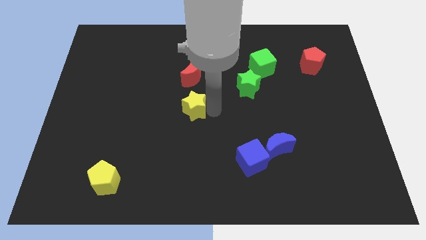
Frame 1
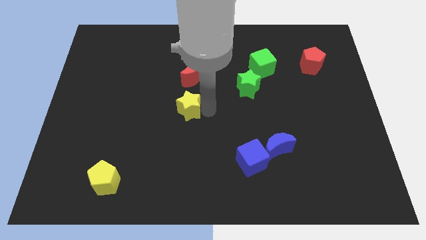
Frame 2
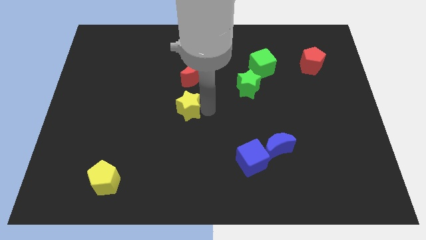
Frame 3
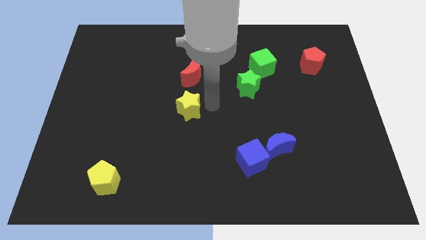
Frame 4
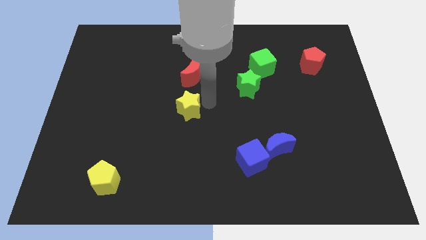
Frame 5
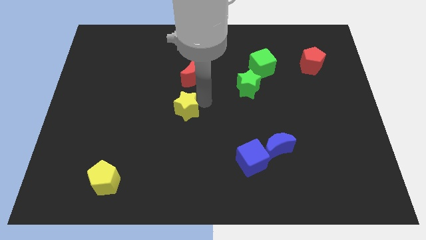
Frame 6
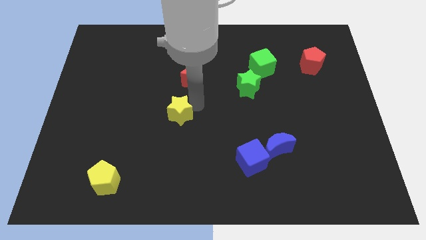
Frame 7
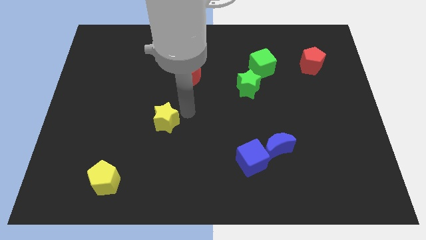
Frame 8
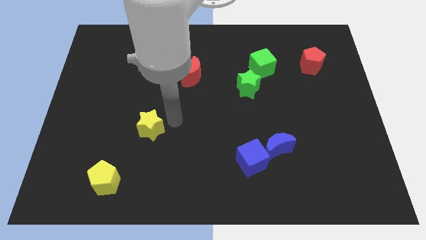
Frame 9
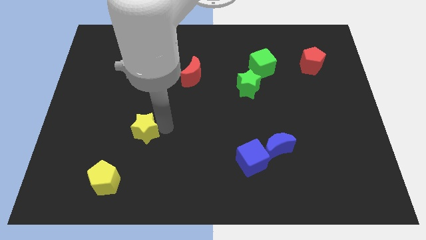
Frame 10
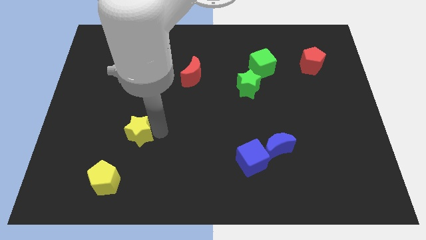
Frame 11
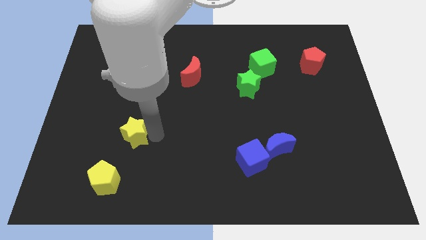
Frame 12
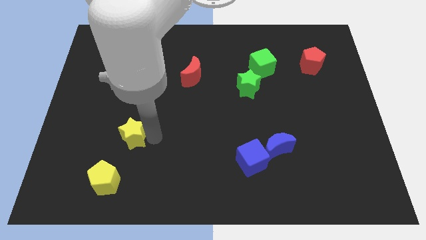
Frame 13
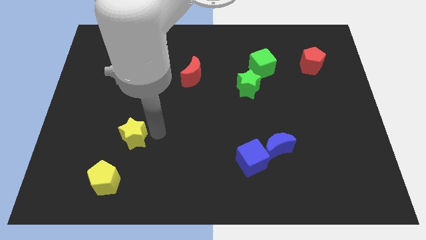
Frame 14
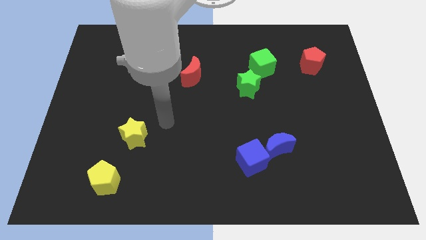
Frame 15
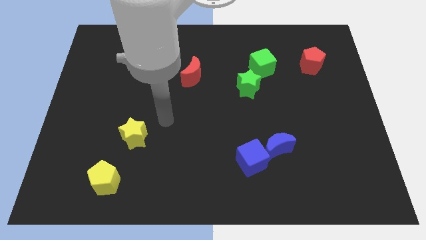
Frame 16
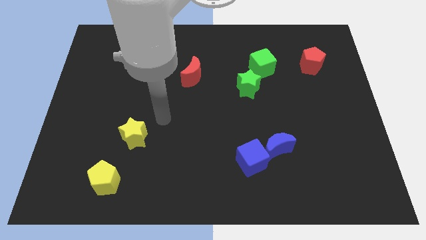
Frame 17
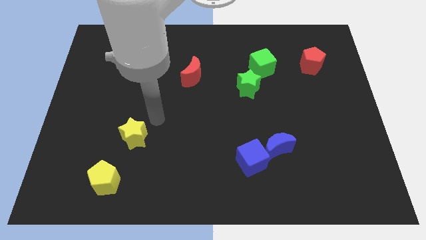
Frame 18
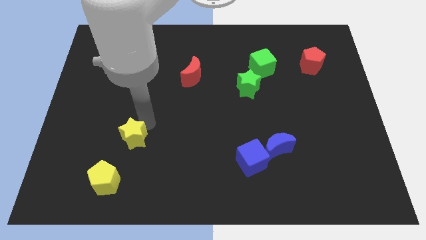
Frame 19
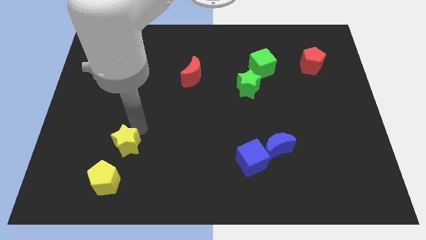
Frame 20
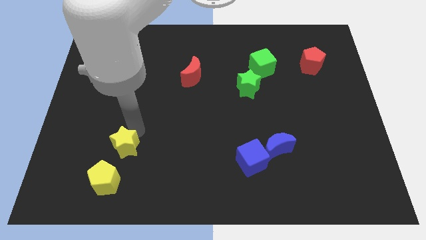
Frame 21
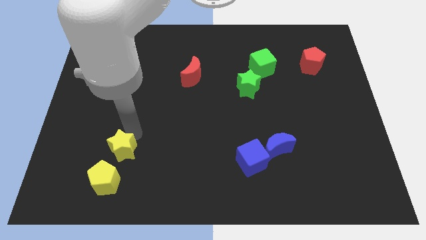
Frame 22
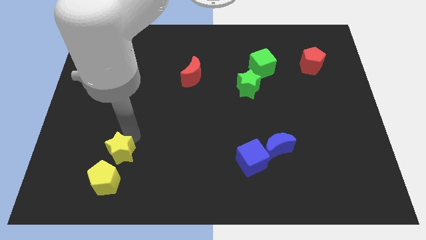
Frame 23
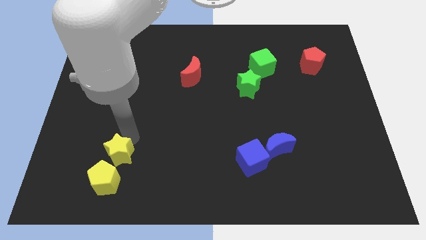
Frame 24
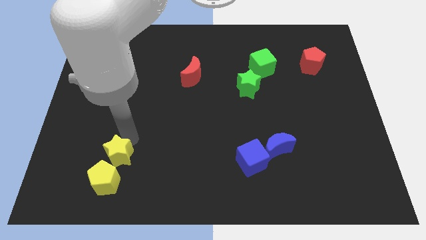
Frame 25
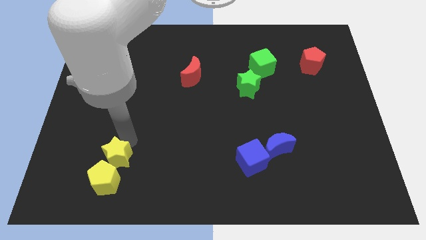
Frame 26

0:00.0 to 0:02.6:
push the yellow star above the yellow pentagon

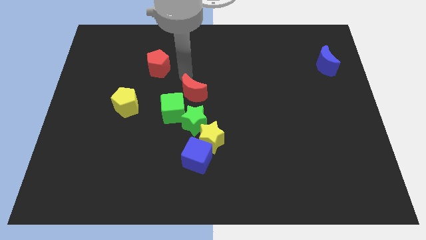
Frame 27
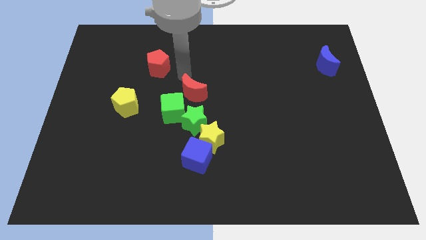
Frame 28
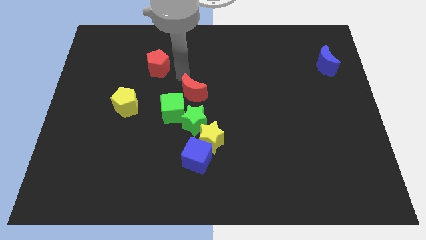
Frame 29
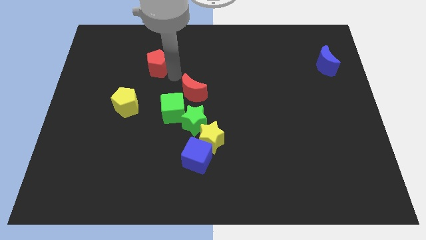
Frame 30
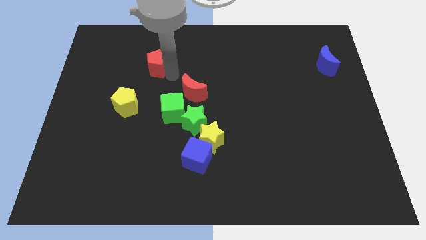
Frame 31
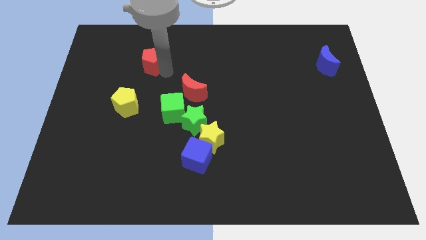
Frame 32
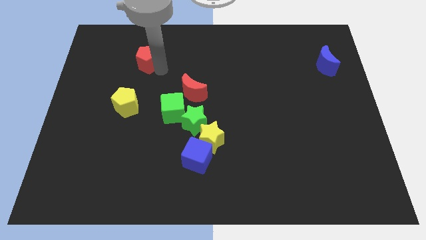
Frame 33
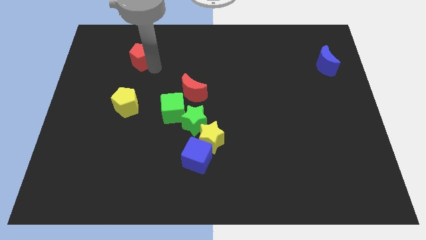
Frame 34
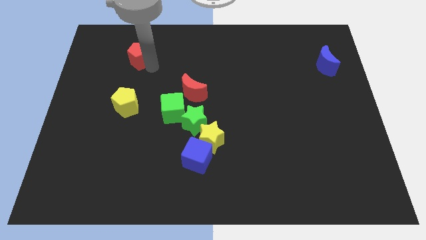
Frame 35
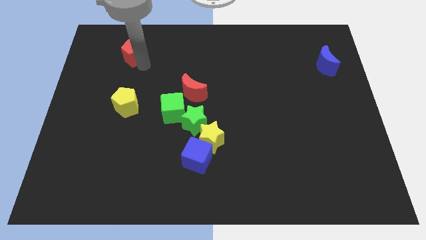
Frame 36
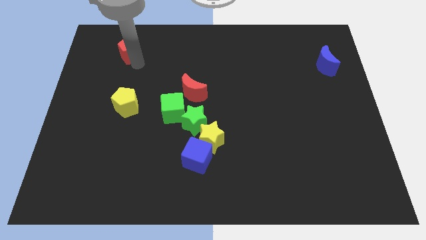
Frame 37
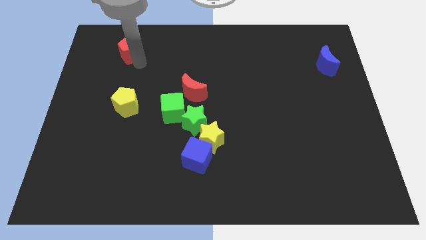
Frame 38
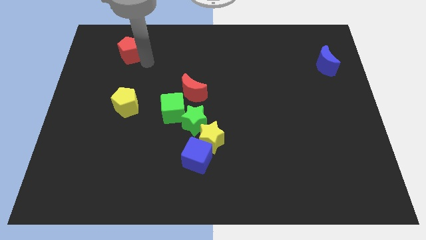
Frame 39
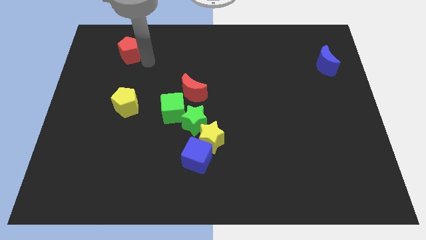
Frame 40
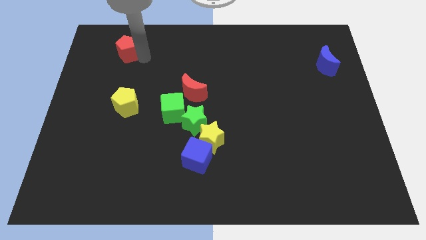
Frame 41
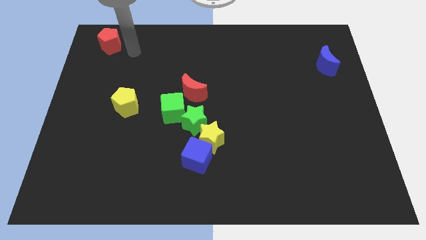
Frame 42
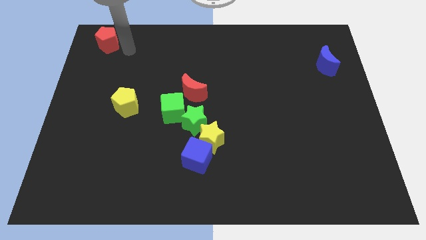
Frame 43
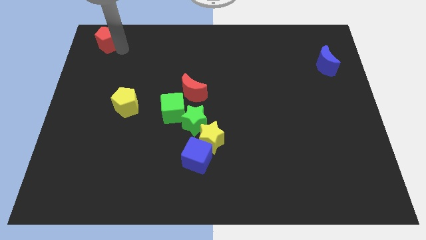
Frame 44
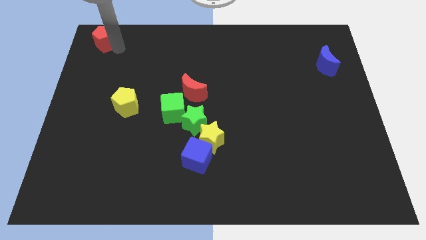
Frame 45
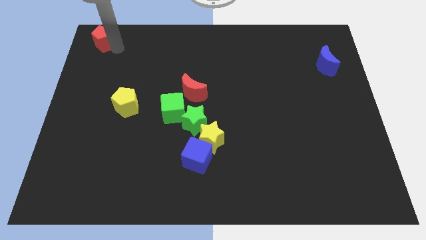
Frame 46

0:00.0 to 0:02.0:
push the red pentagon to the top left side of the board

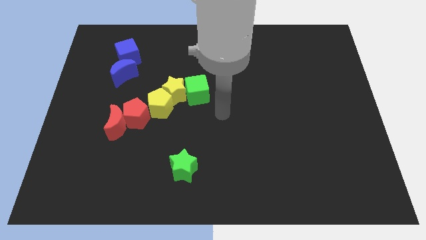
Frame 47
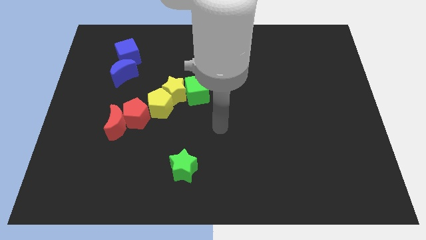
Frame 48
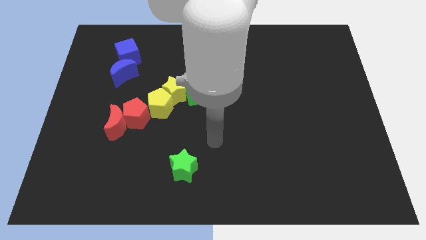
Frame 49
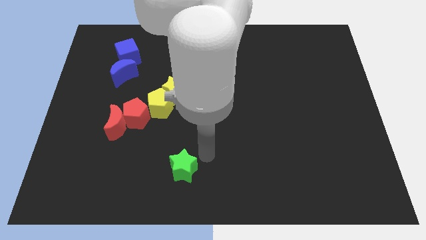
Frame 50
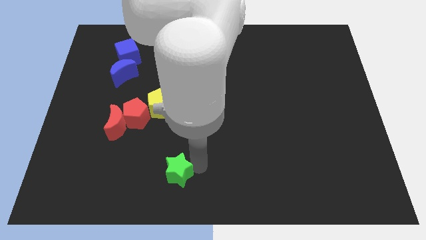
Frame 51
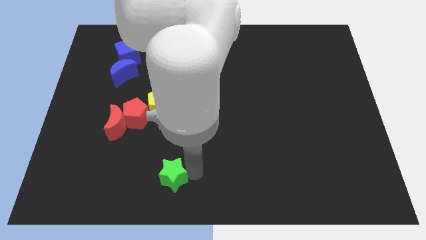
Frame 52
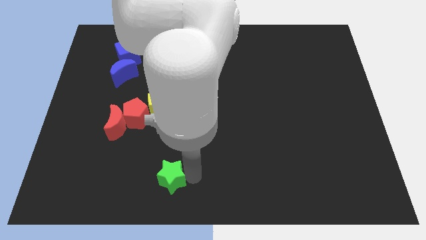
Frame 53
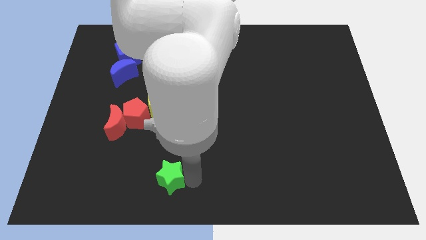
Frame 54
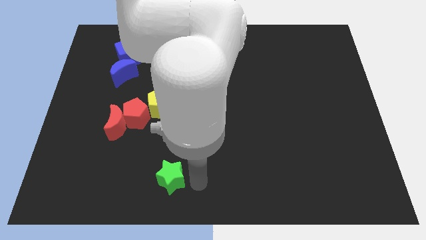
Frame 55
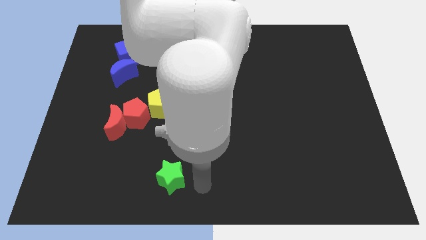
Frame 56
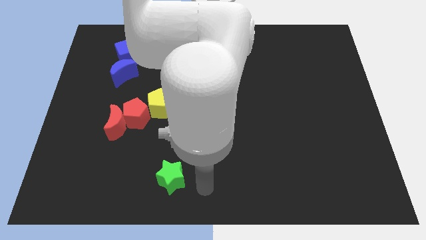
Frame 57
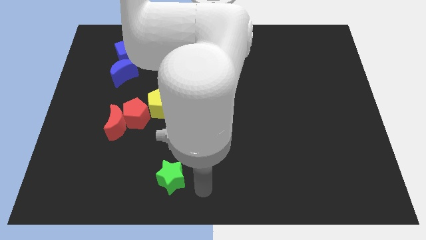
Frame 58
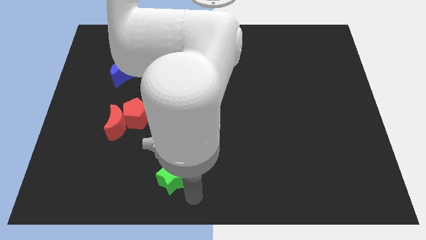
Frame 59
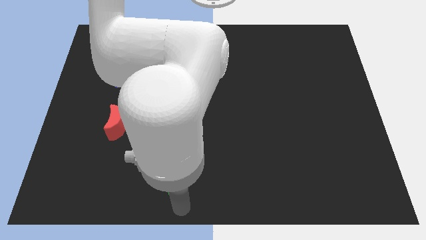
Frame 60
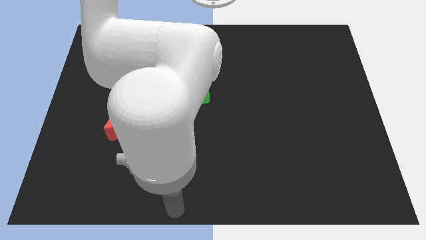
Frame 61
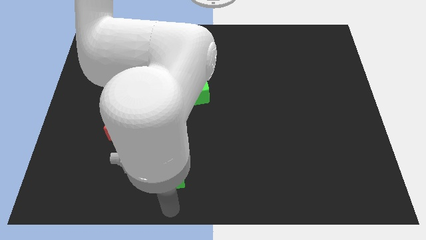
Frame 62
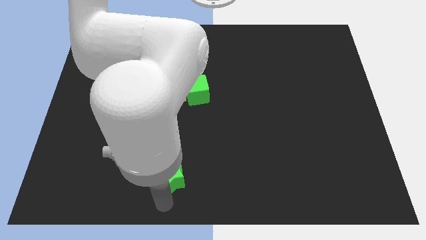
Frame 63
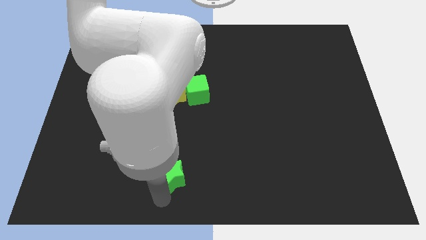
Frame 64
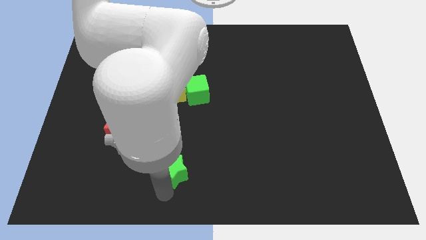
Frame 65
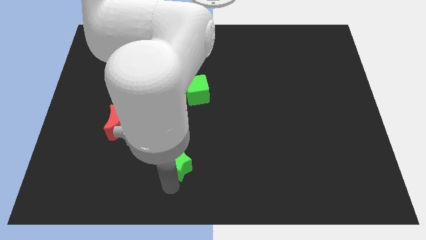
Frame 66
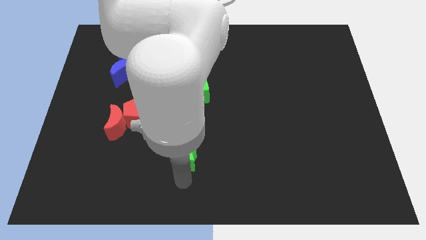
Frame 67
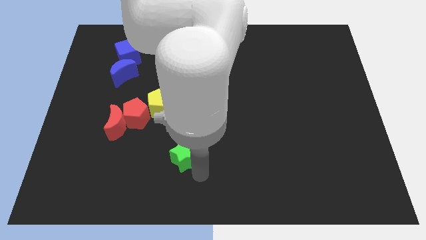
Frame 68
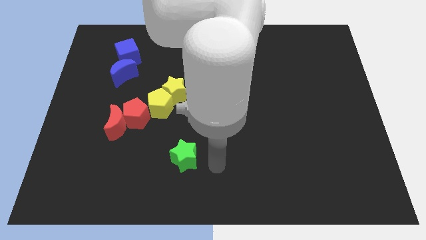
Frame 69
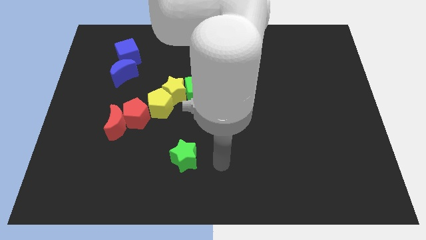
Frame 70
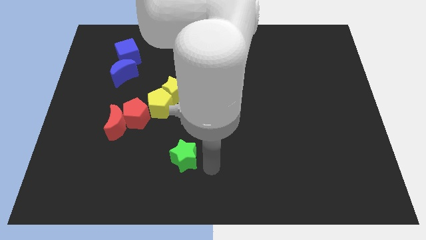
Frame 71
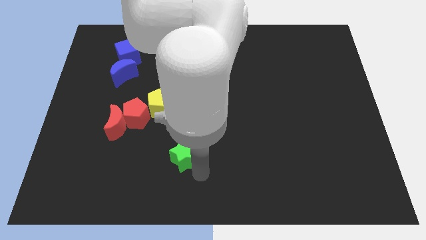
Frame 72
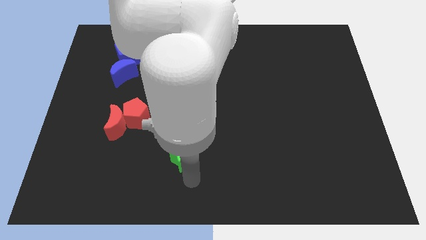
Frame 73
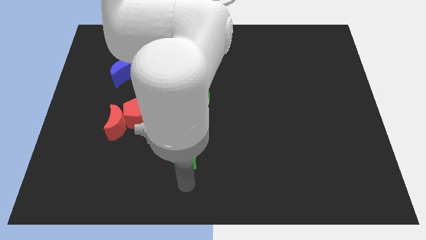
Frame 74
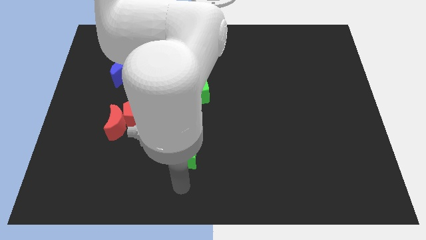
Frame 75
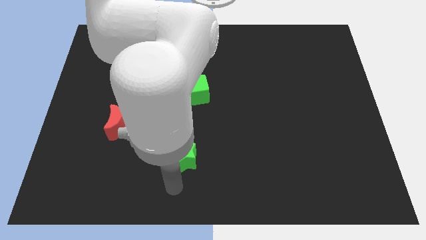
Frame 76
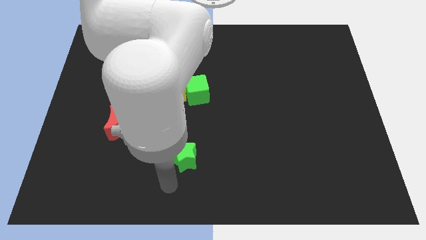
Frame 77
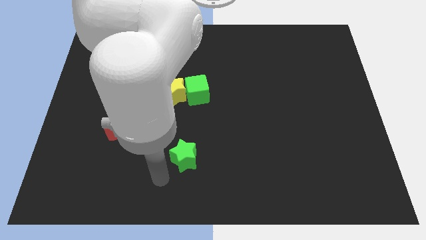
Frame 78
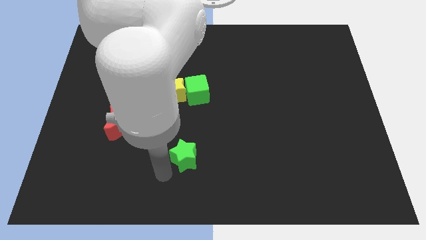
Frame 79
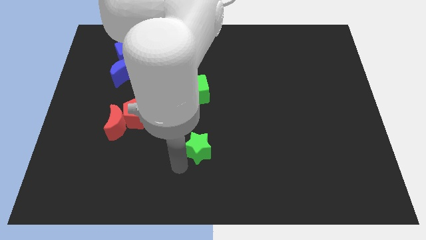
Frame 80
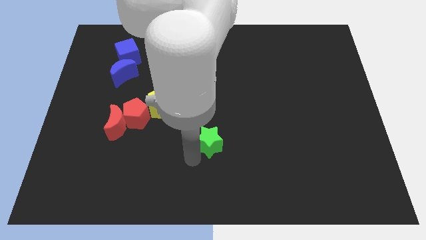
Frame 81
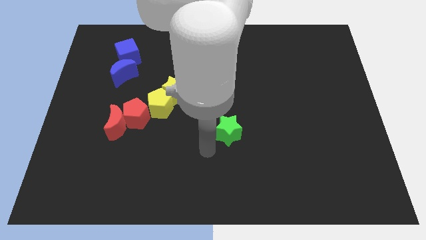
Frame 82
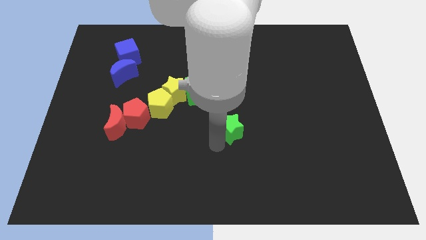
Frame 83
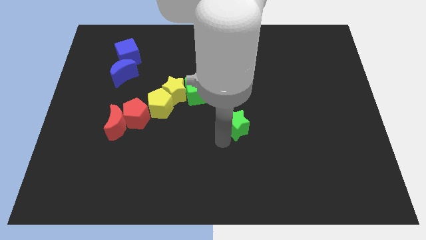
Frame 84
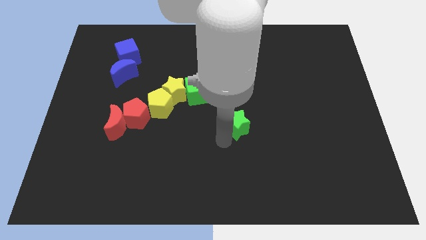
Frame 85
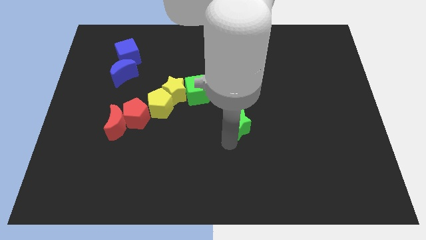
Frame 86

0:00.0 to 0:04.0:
put the green star at the bottom right of the green cube
